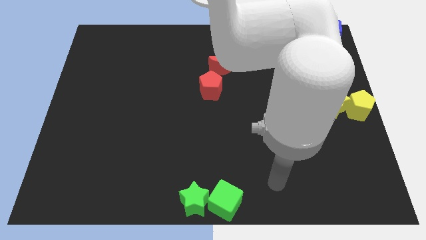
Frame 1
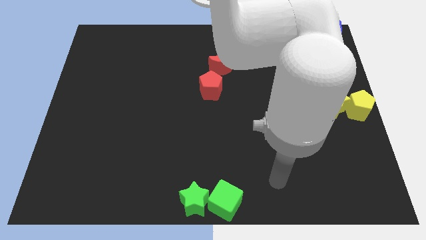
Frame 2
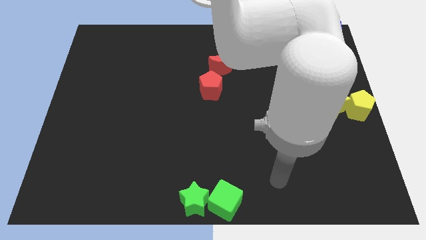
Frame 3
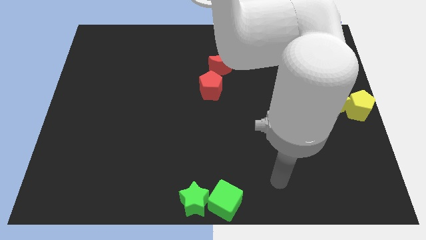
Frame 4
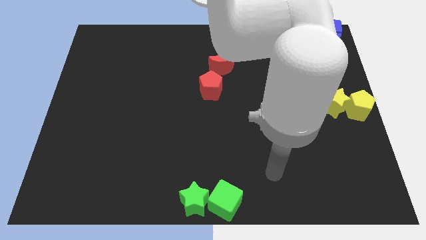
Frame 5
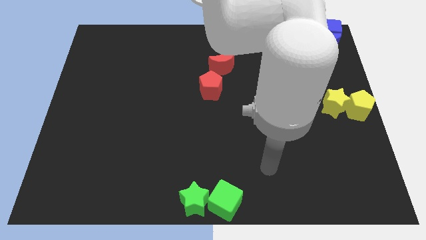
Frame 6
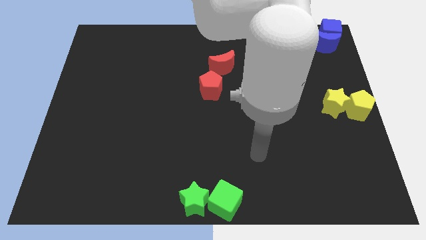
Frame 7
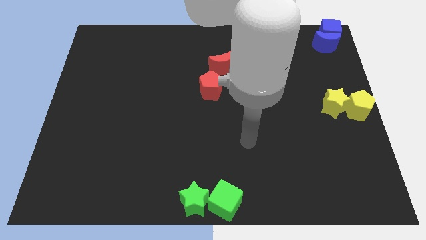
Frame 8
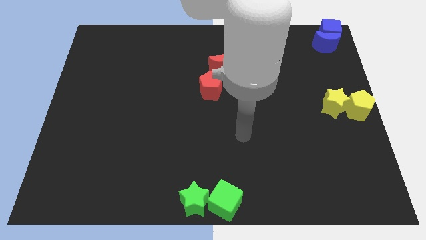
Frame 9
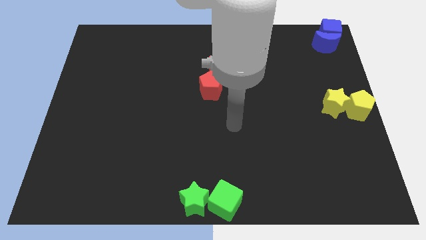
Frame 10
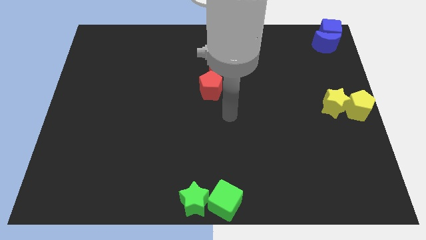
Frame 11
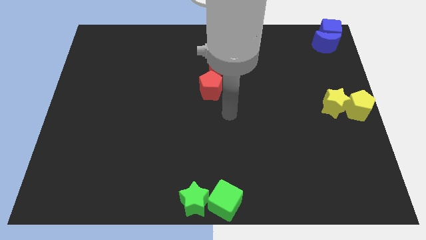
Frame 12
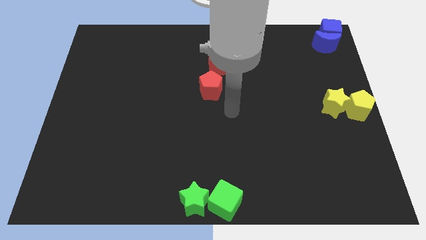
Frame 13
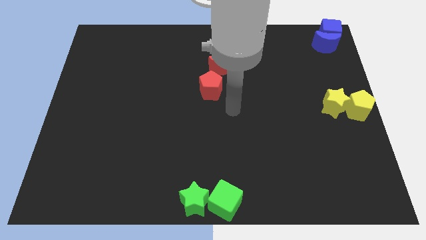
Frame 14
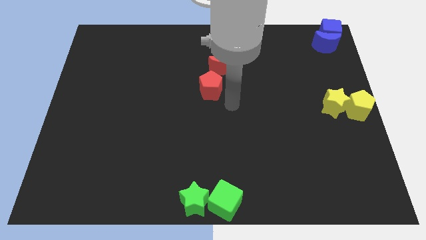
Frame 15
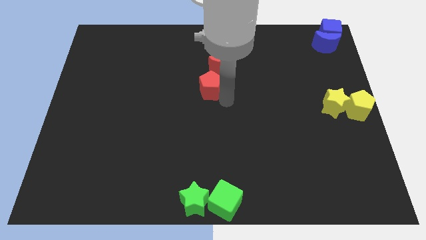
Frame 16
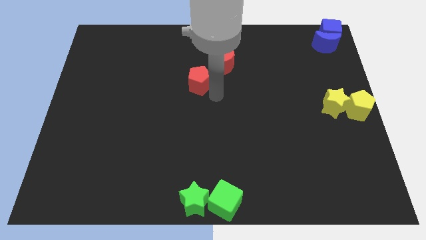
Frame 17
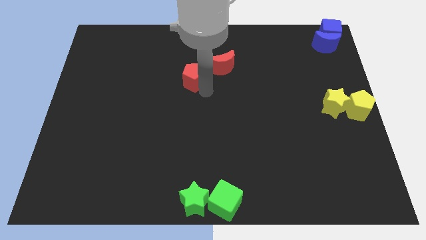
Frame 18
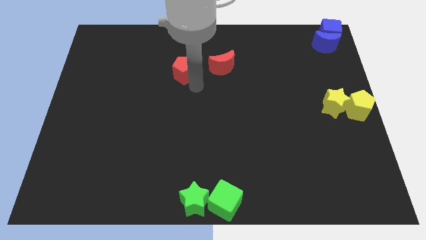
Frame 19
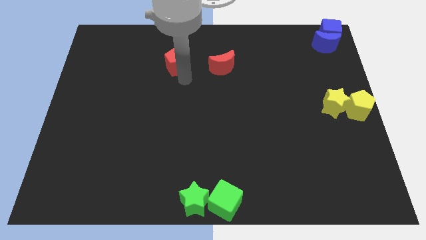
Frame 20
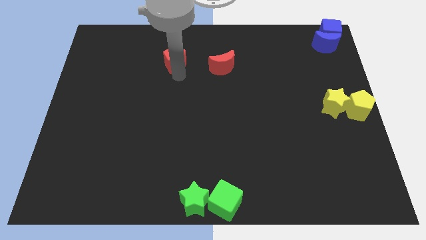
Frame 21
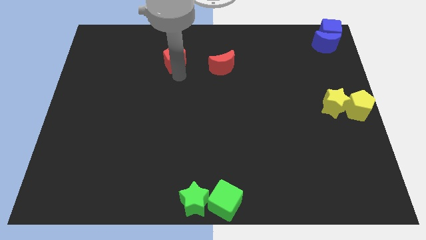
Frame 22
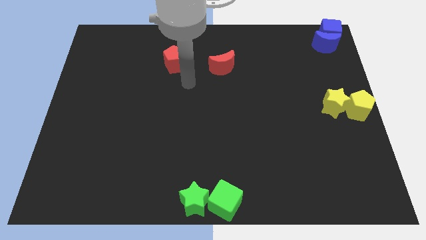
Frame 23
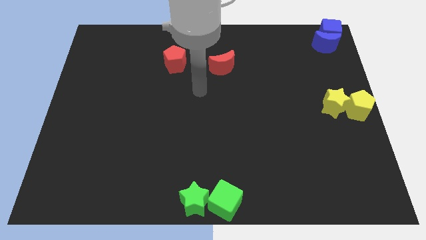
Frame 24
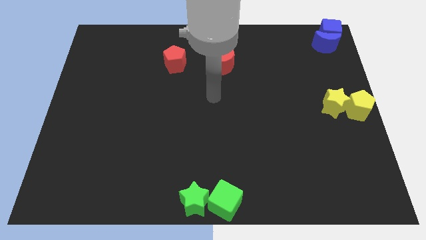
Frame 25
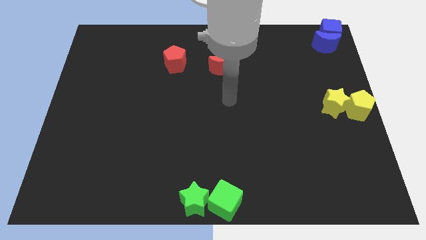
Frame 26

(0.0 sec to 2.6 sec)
move the red pentagon to the left of the red crescent

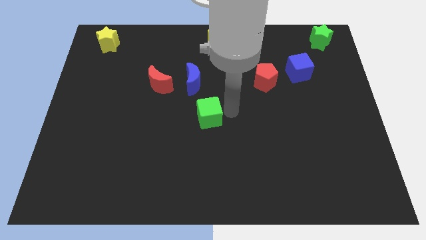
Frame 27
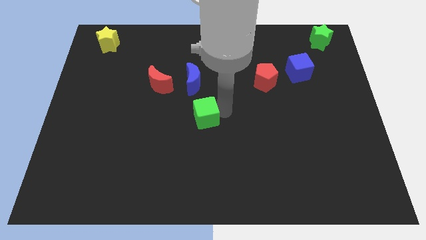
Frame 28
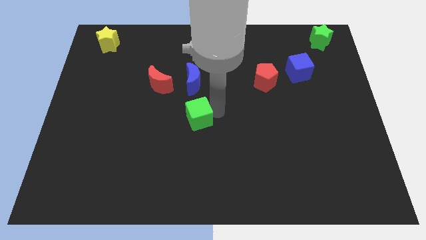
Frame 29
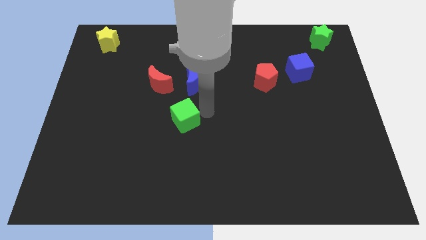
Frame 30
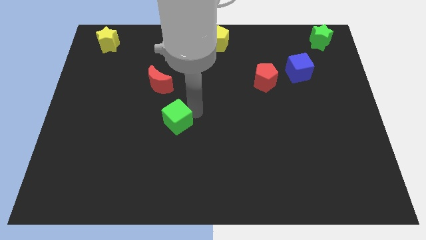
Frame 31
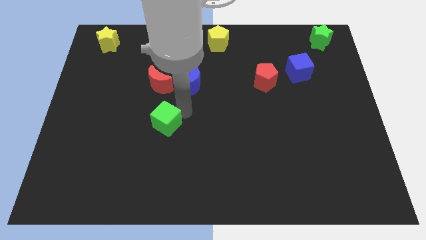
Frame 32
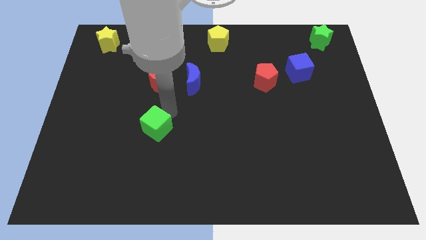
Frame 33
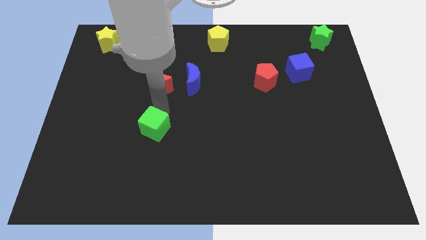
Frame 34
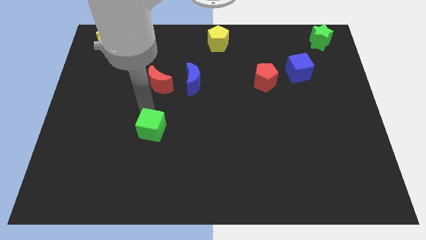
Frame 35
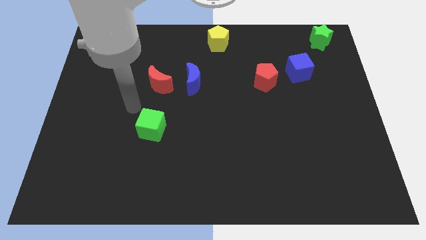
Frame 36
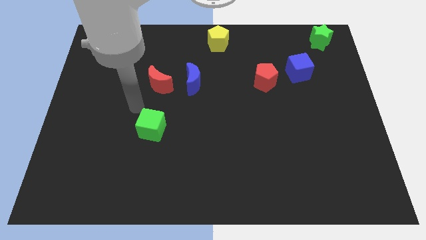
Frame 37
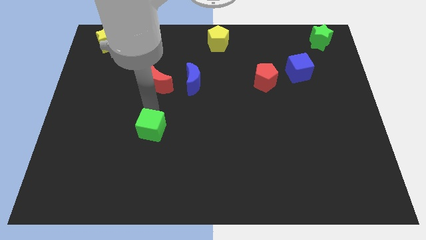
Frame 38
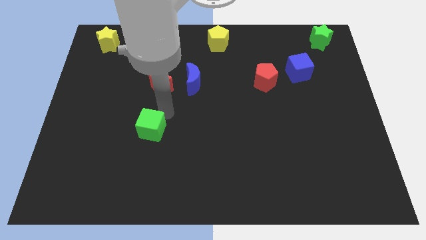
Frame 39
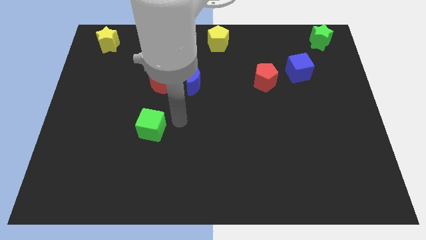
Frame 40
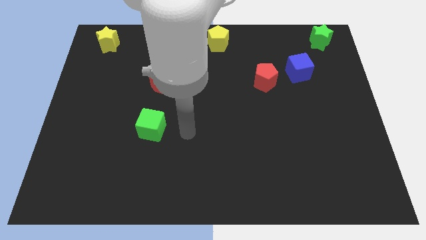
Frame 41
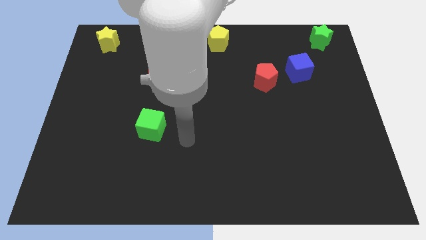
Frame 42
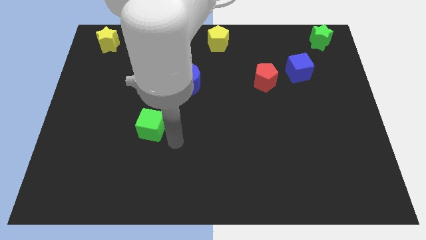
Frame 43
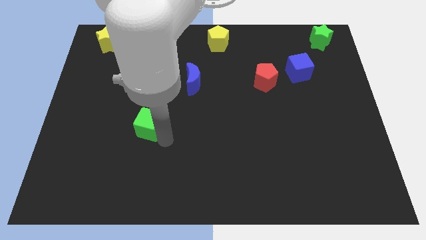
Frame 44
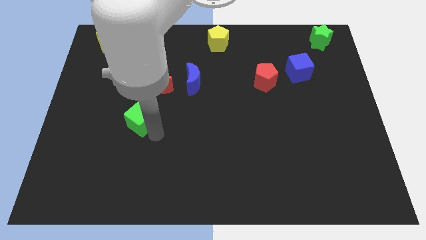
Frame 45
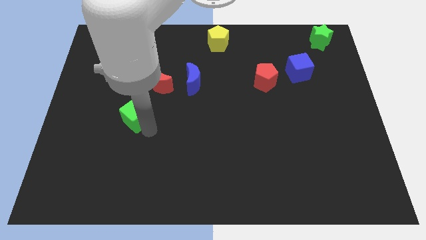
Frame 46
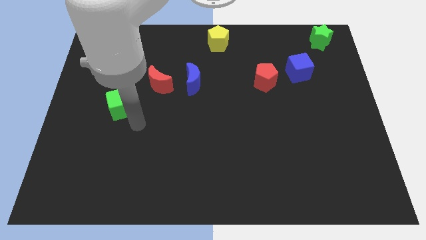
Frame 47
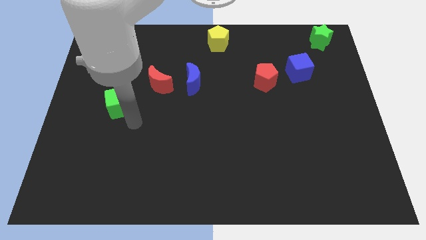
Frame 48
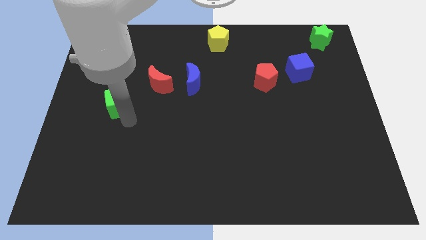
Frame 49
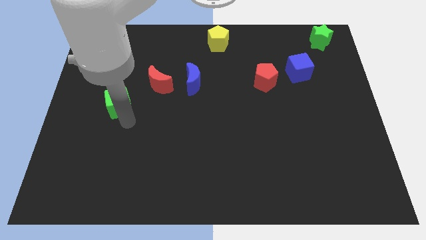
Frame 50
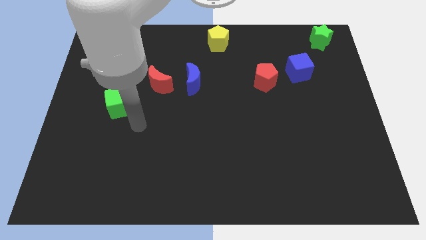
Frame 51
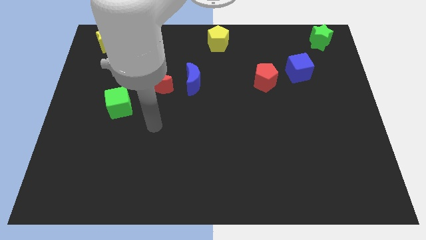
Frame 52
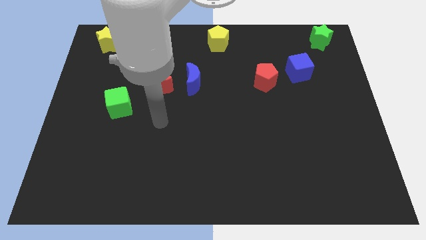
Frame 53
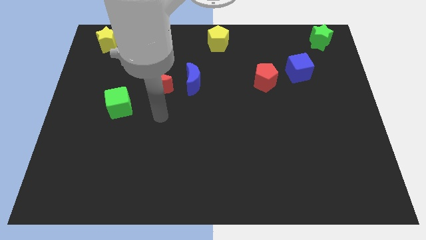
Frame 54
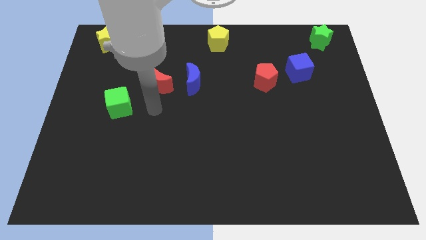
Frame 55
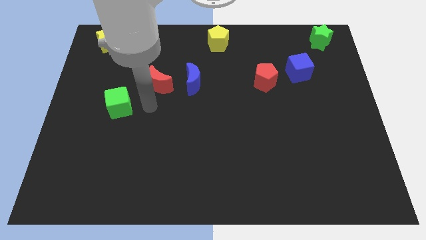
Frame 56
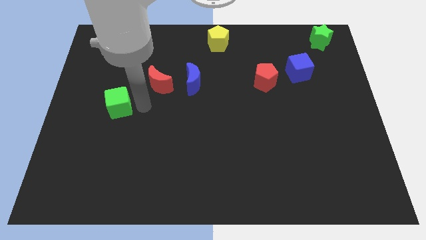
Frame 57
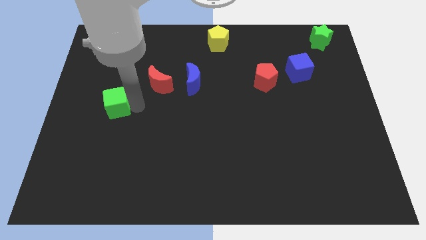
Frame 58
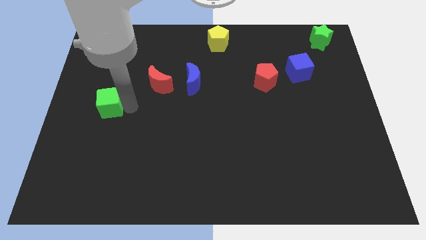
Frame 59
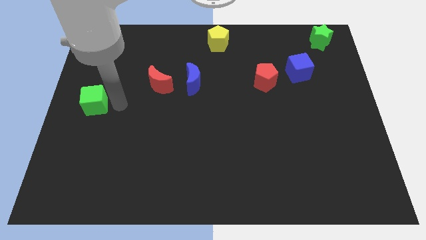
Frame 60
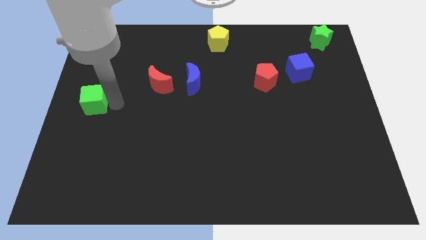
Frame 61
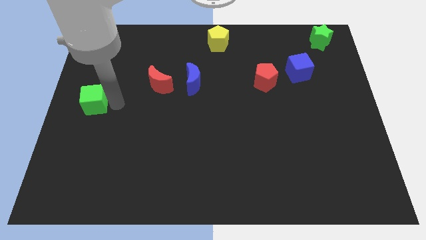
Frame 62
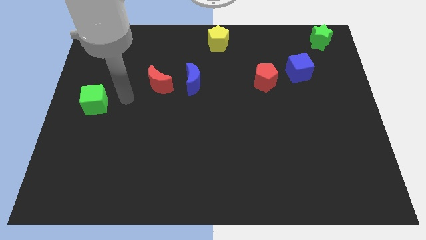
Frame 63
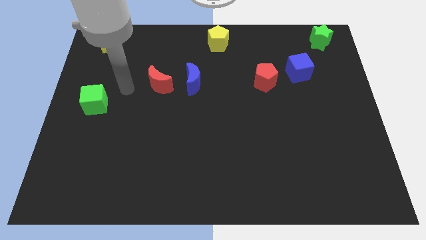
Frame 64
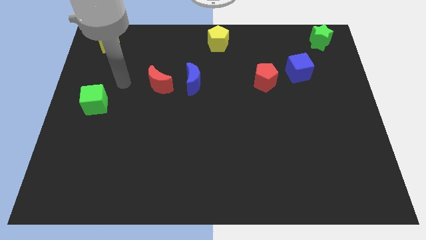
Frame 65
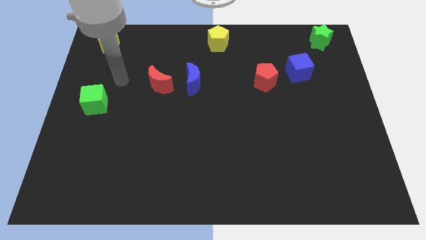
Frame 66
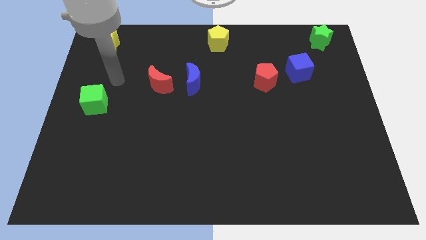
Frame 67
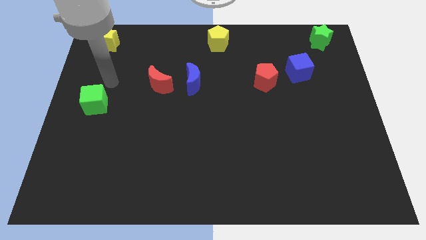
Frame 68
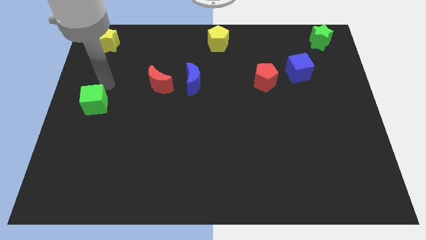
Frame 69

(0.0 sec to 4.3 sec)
move the green cube to the bottom of the yellow star

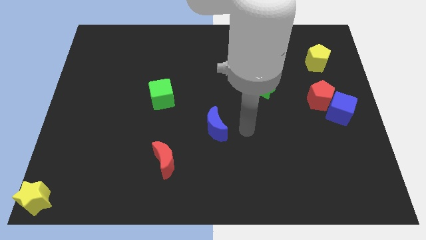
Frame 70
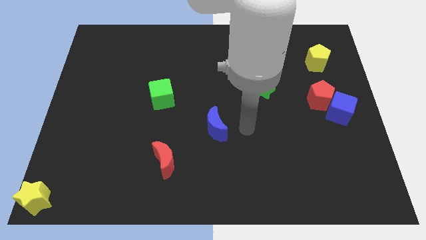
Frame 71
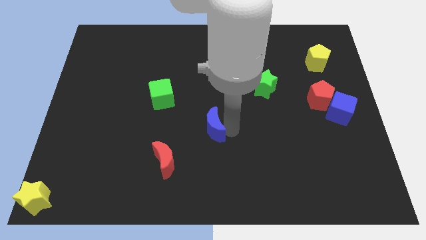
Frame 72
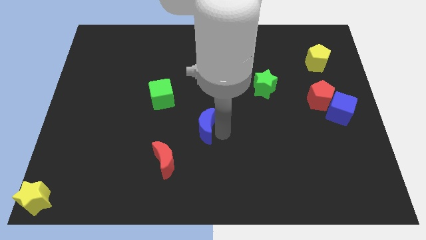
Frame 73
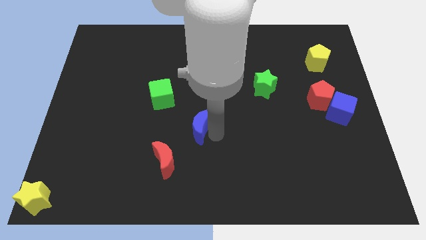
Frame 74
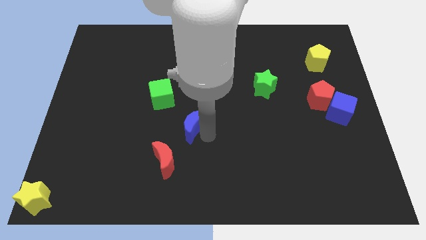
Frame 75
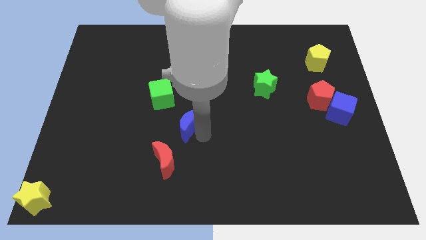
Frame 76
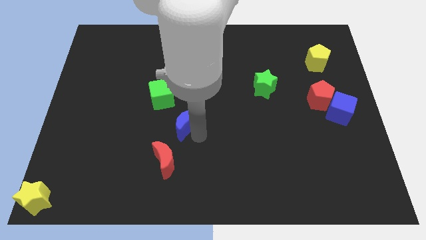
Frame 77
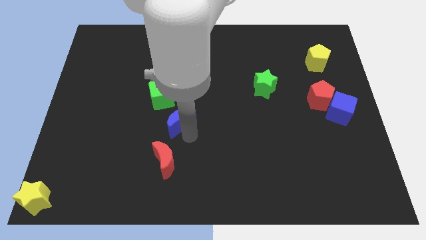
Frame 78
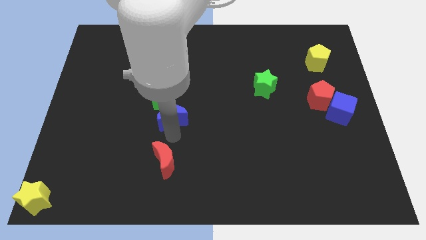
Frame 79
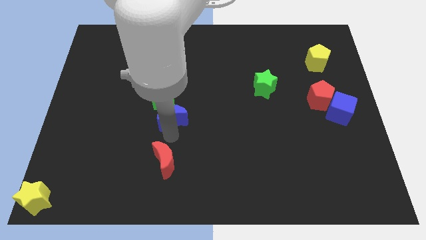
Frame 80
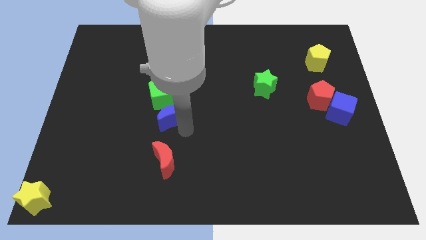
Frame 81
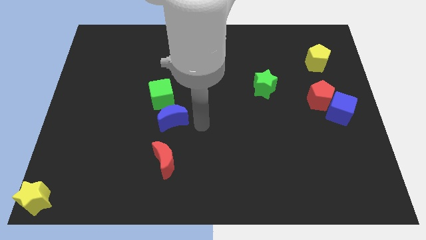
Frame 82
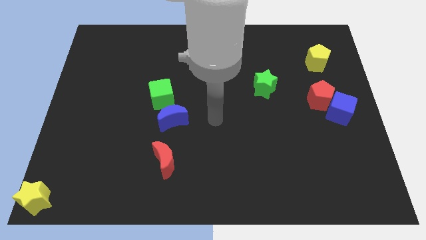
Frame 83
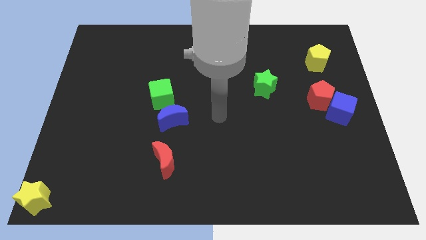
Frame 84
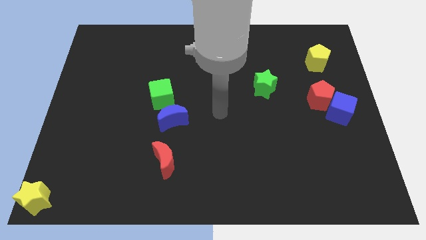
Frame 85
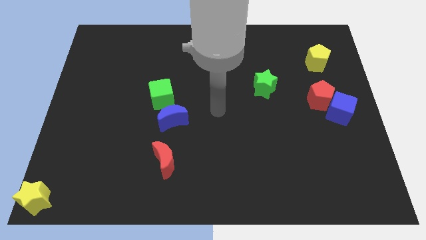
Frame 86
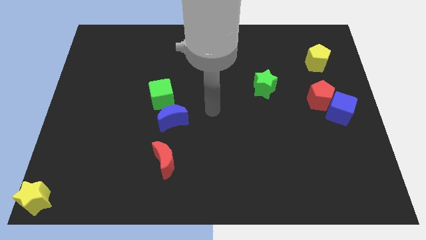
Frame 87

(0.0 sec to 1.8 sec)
place the blue crescent below to the green cube
